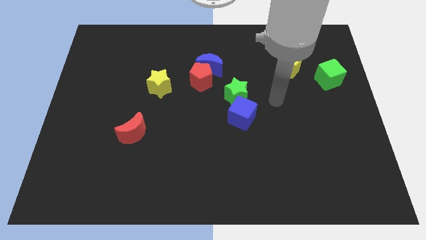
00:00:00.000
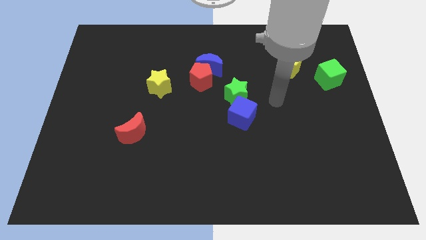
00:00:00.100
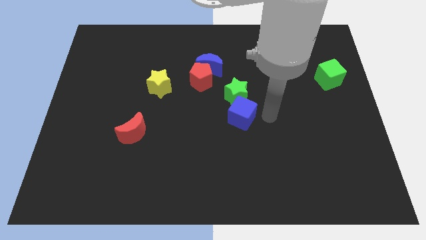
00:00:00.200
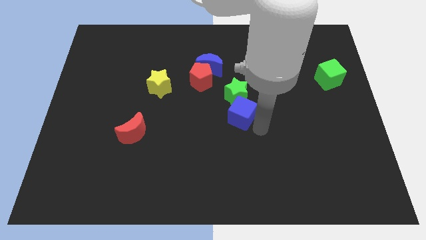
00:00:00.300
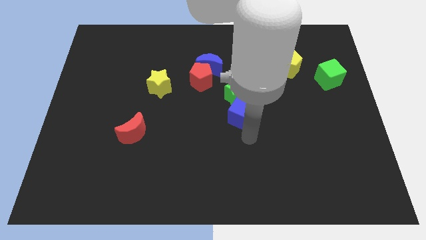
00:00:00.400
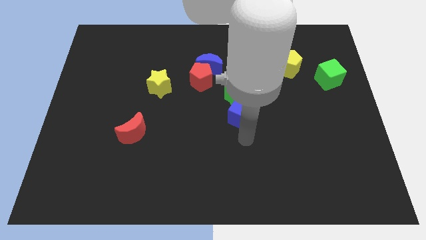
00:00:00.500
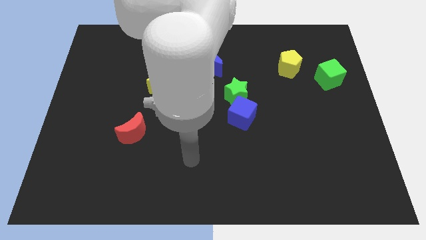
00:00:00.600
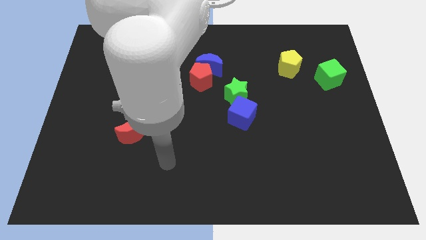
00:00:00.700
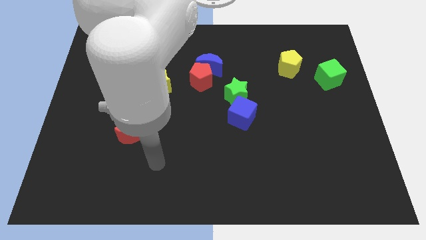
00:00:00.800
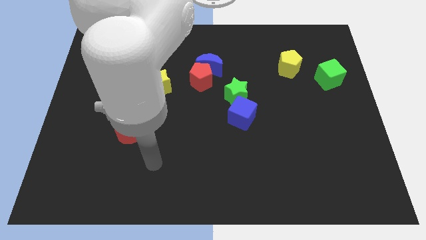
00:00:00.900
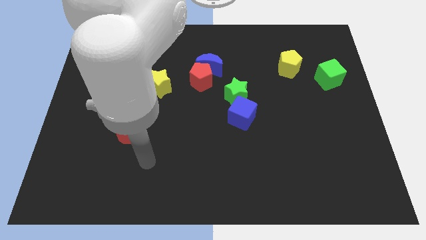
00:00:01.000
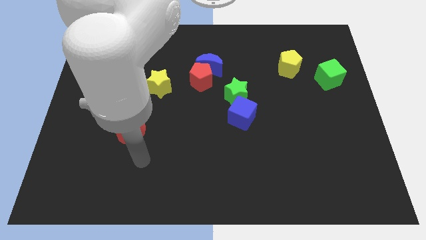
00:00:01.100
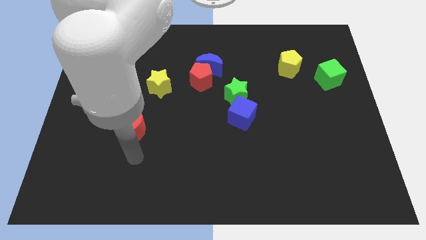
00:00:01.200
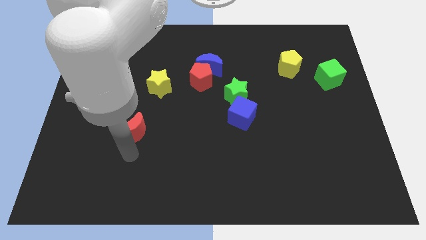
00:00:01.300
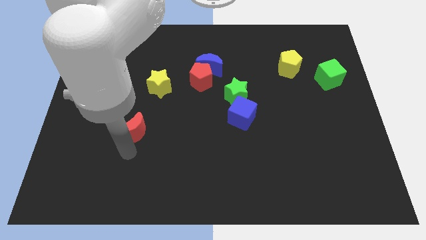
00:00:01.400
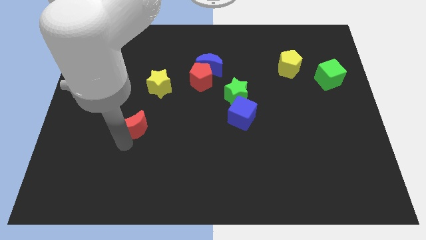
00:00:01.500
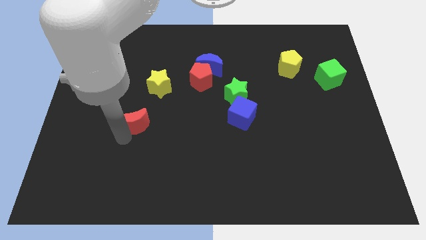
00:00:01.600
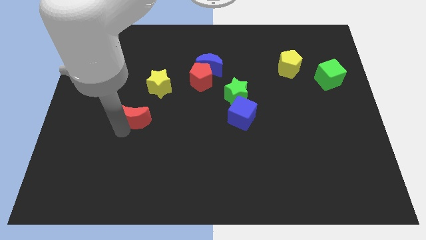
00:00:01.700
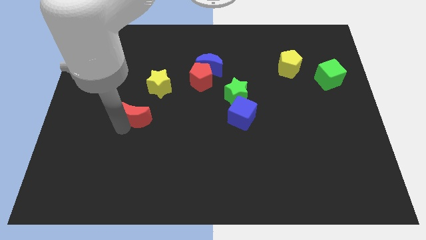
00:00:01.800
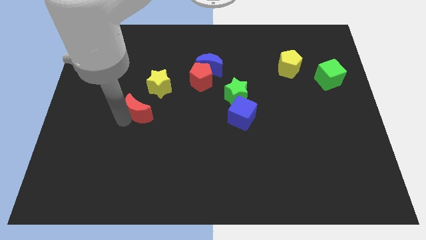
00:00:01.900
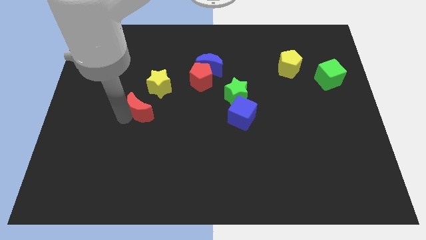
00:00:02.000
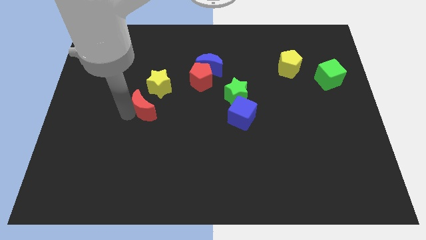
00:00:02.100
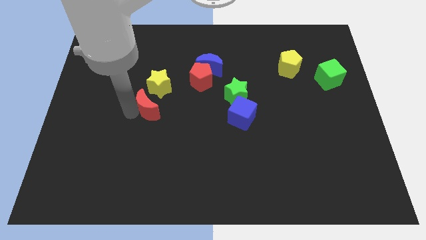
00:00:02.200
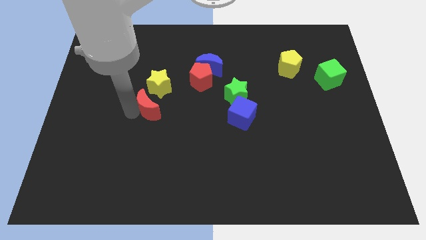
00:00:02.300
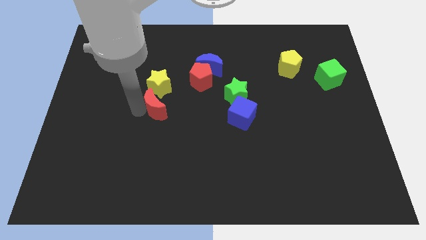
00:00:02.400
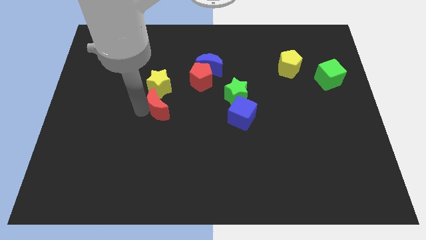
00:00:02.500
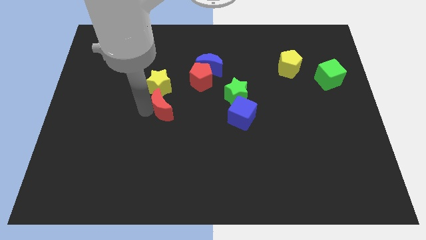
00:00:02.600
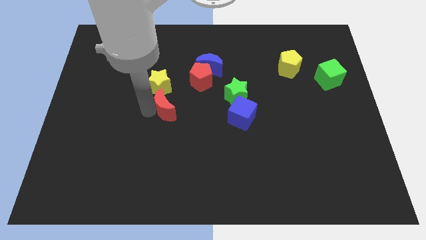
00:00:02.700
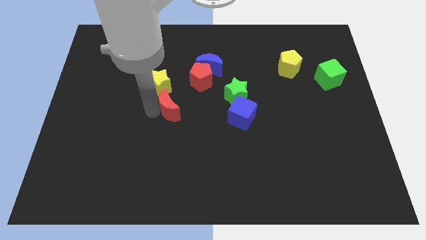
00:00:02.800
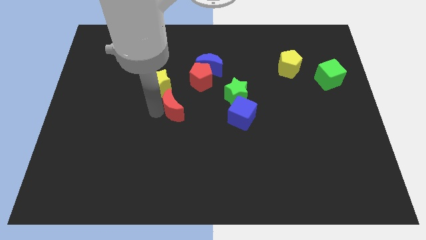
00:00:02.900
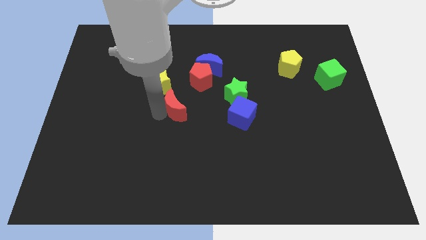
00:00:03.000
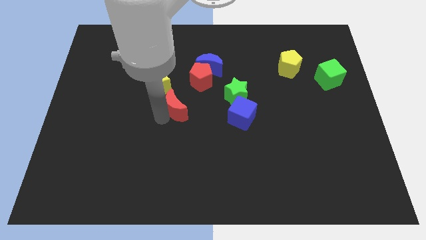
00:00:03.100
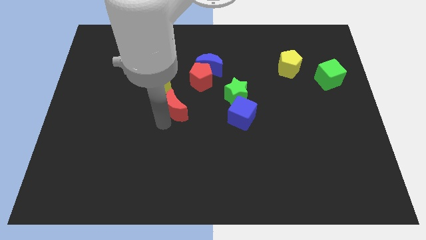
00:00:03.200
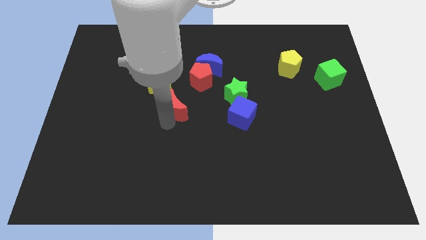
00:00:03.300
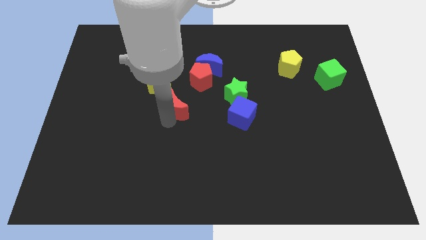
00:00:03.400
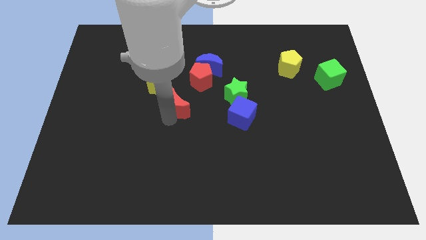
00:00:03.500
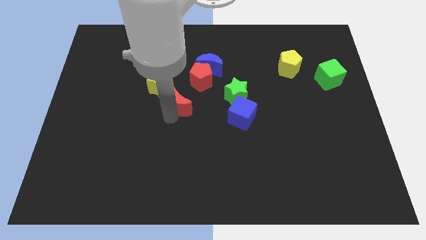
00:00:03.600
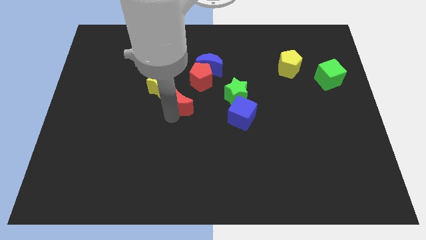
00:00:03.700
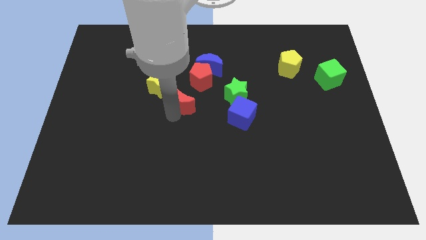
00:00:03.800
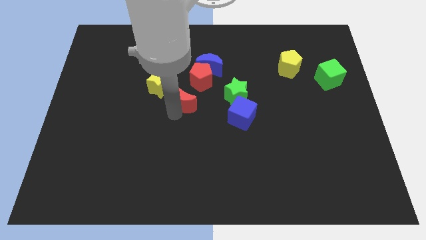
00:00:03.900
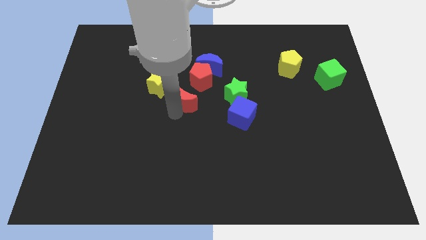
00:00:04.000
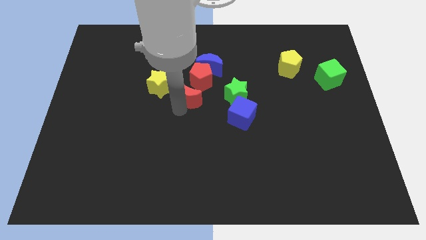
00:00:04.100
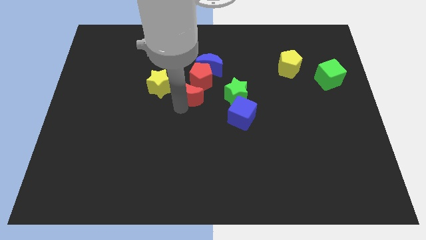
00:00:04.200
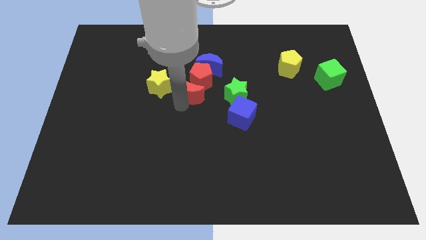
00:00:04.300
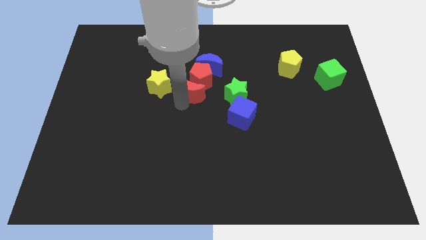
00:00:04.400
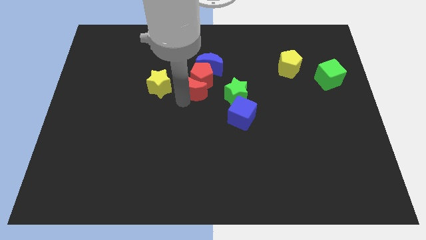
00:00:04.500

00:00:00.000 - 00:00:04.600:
move the red moon close to the red pentagon

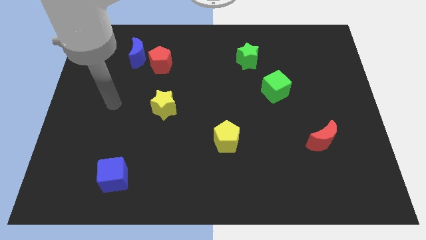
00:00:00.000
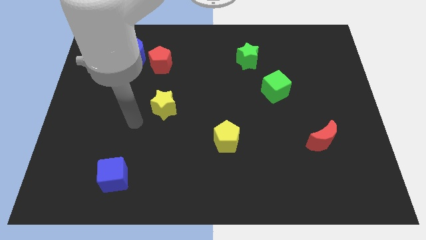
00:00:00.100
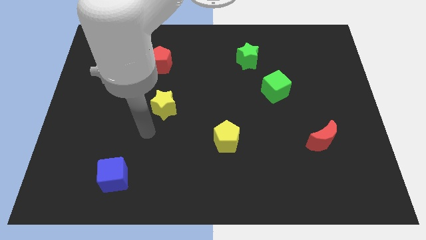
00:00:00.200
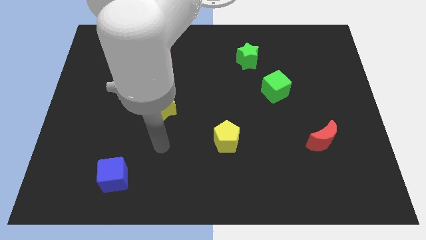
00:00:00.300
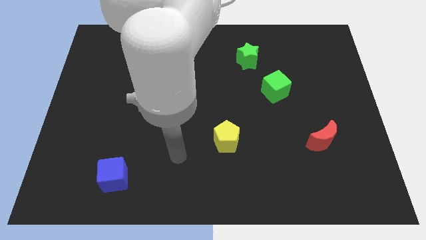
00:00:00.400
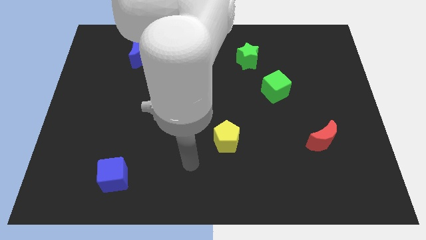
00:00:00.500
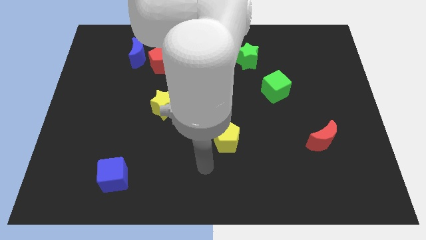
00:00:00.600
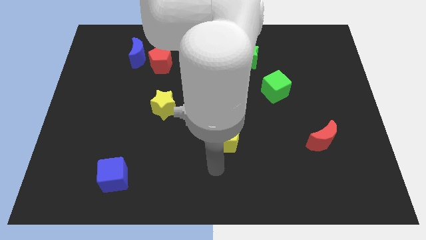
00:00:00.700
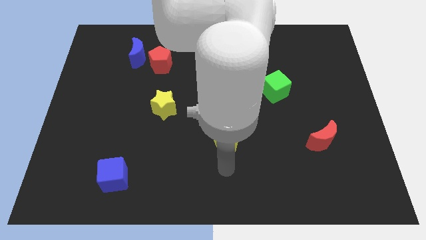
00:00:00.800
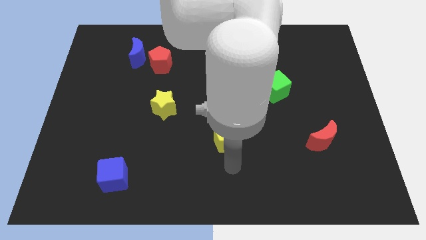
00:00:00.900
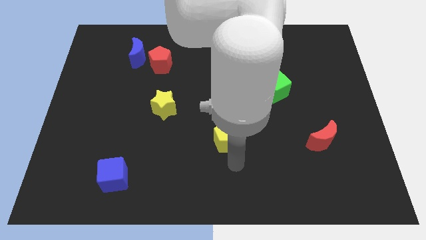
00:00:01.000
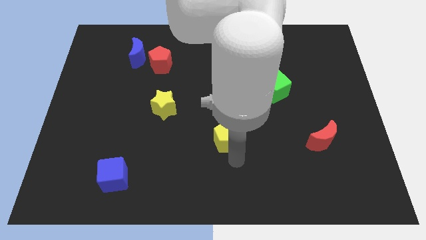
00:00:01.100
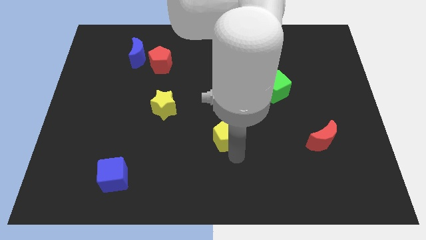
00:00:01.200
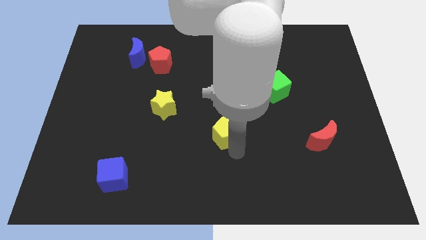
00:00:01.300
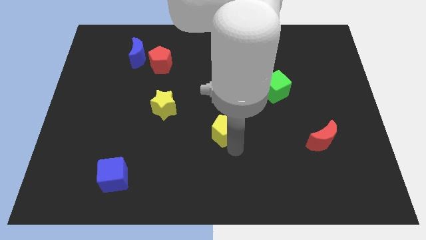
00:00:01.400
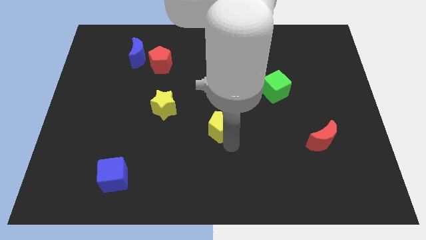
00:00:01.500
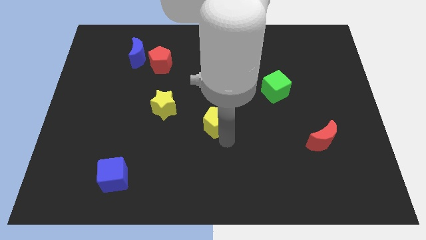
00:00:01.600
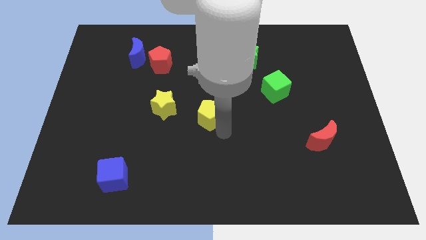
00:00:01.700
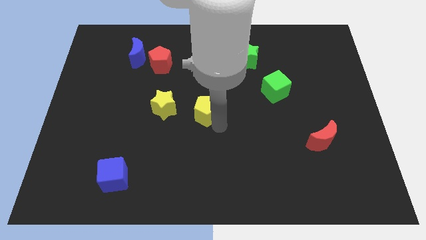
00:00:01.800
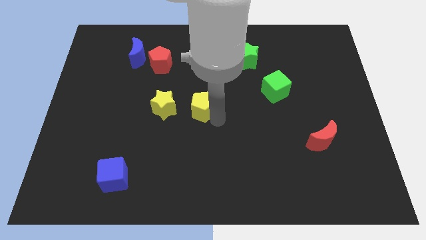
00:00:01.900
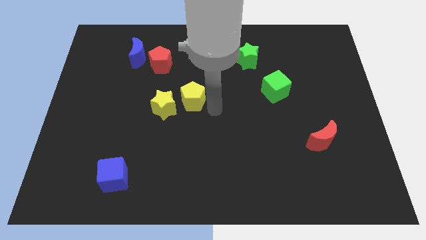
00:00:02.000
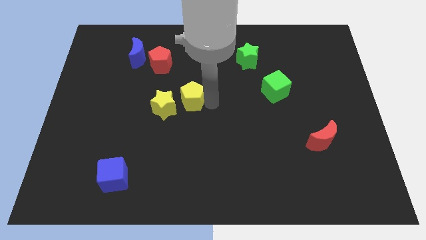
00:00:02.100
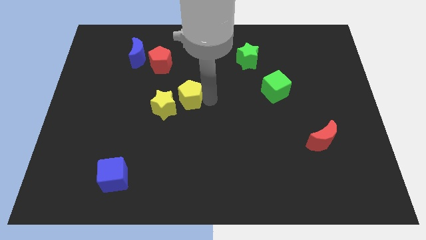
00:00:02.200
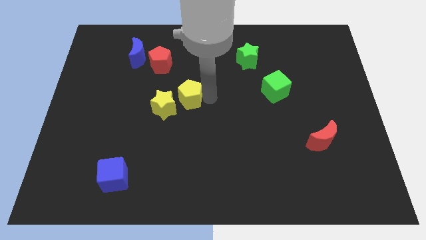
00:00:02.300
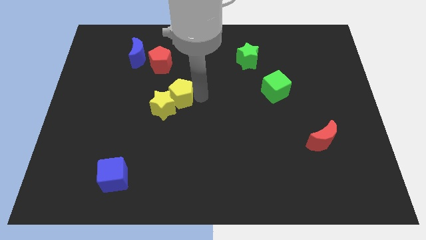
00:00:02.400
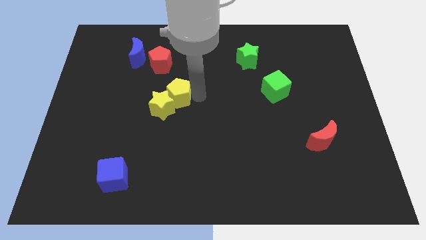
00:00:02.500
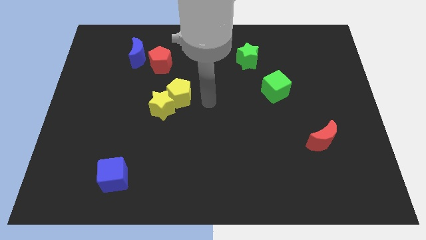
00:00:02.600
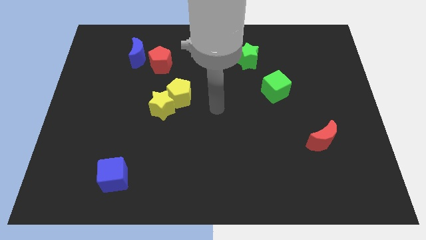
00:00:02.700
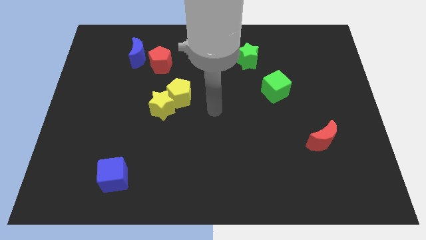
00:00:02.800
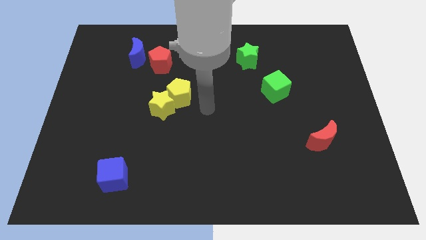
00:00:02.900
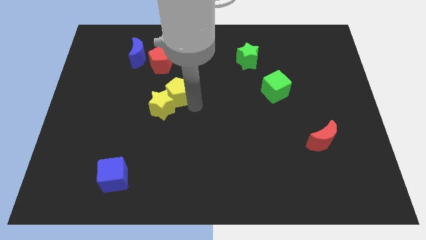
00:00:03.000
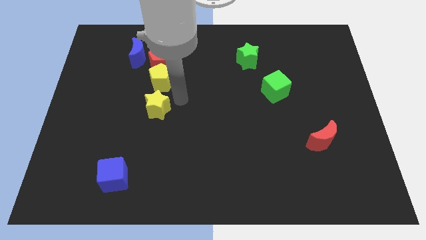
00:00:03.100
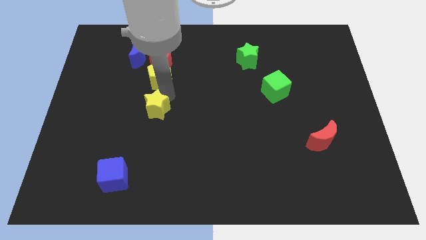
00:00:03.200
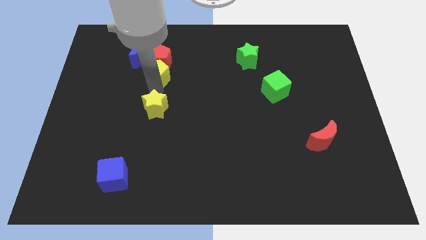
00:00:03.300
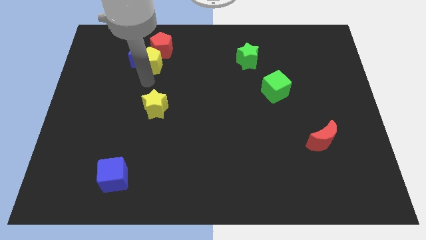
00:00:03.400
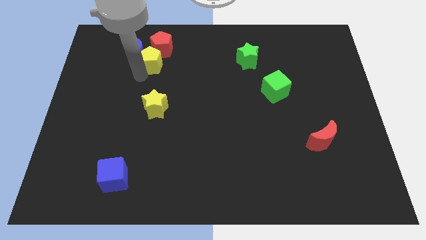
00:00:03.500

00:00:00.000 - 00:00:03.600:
put the yellow pentagon to the blue moon

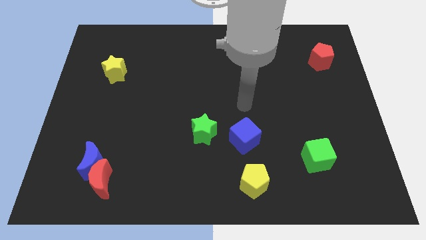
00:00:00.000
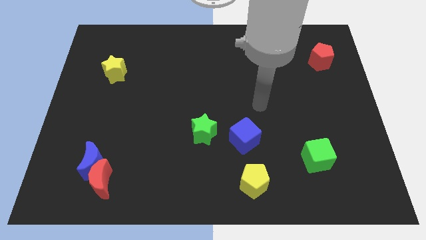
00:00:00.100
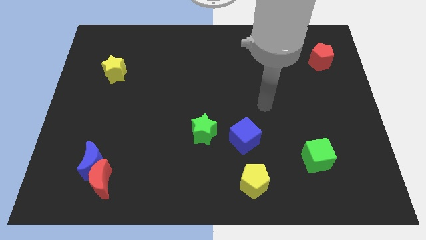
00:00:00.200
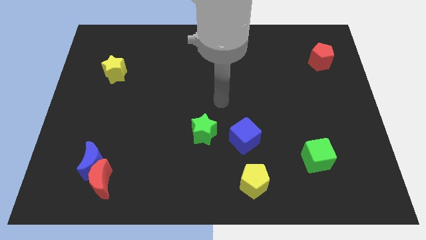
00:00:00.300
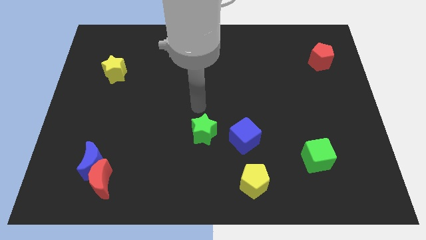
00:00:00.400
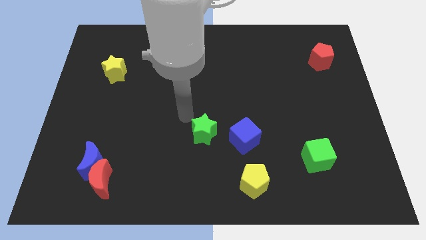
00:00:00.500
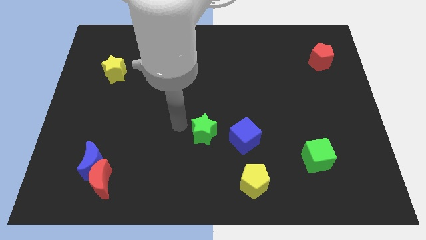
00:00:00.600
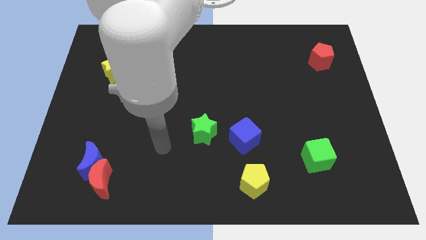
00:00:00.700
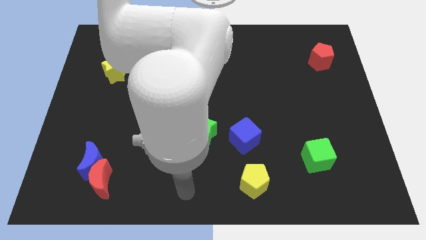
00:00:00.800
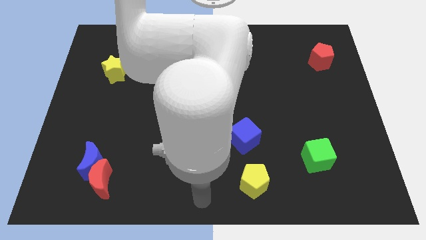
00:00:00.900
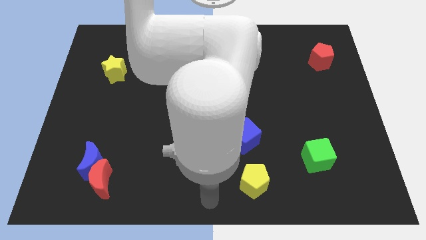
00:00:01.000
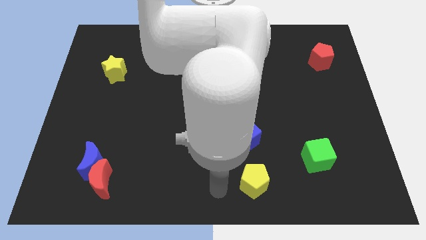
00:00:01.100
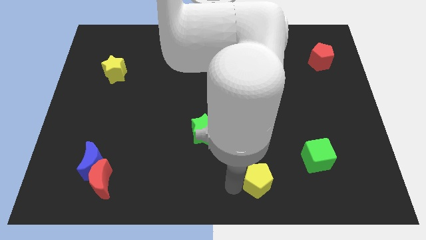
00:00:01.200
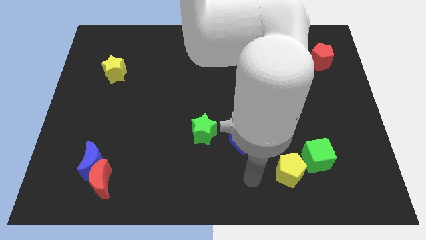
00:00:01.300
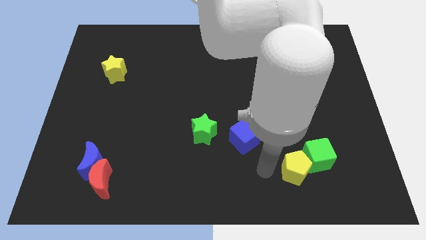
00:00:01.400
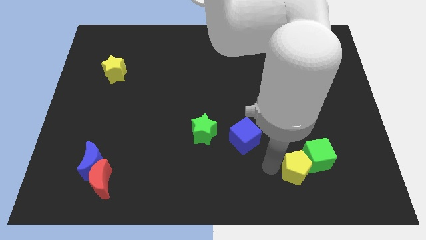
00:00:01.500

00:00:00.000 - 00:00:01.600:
put the yellow pentagon towards the green cube
